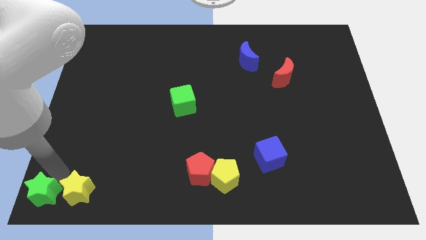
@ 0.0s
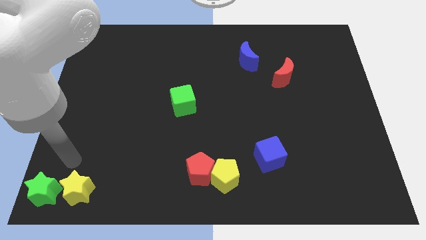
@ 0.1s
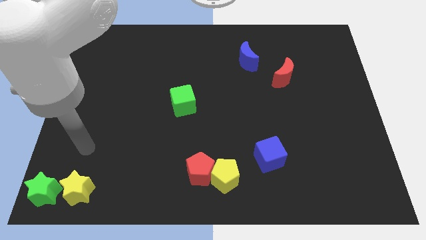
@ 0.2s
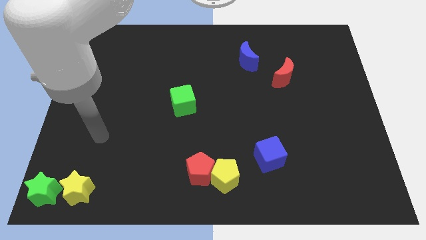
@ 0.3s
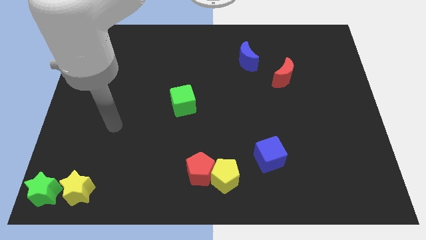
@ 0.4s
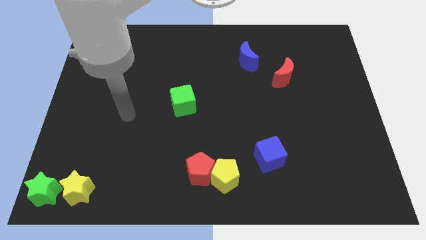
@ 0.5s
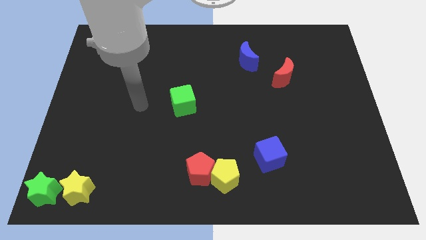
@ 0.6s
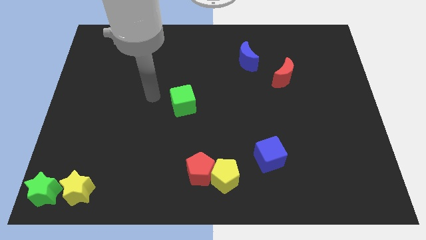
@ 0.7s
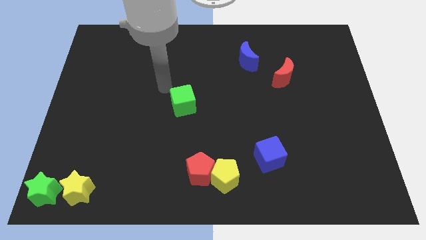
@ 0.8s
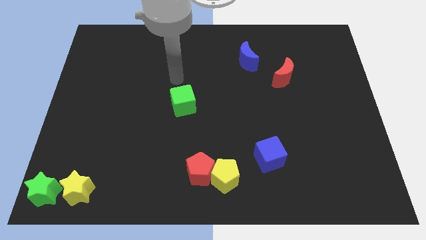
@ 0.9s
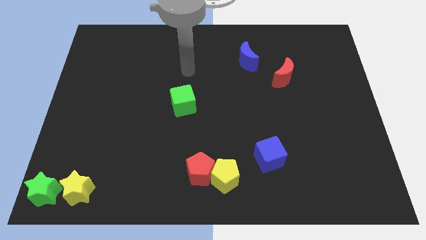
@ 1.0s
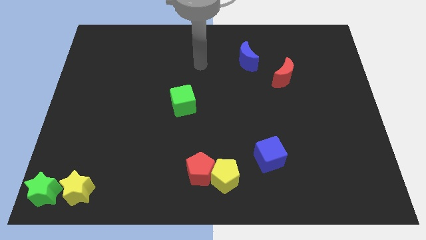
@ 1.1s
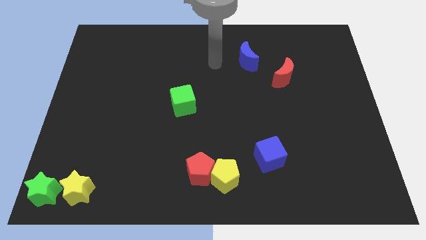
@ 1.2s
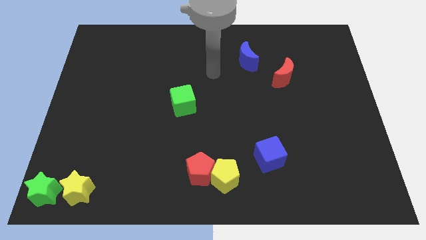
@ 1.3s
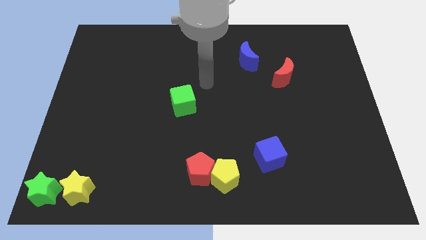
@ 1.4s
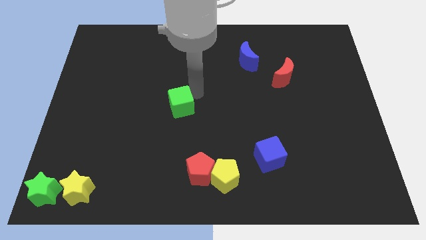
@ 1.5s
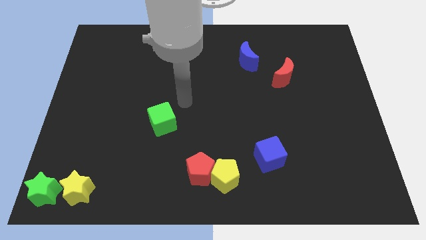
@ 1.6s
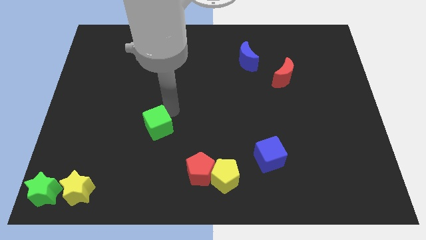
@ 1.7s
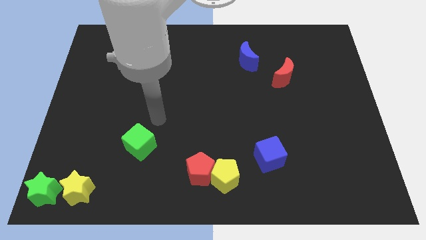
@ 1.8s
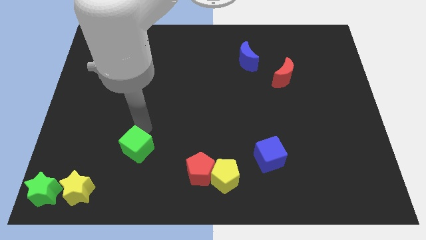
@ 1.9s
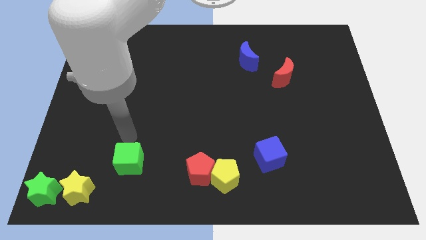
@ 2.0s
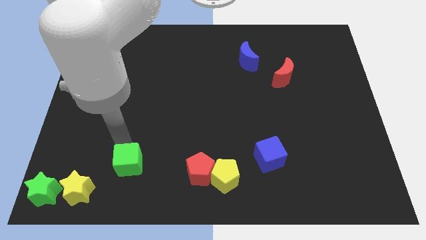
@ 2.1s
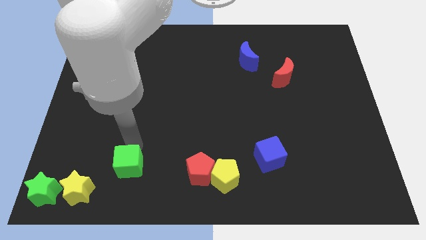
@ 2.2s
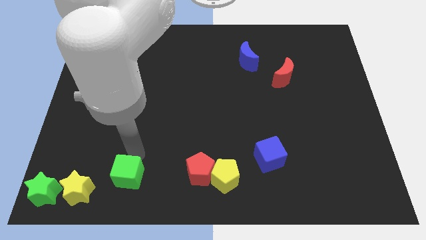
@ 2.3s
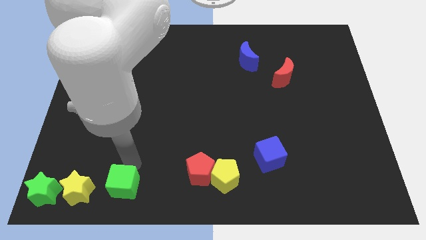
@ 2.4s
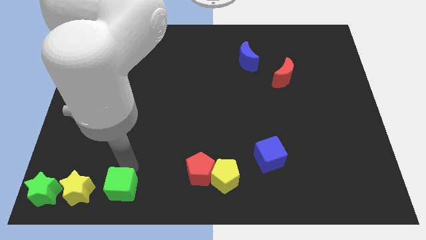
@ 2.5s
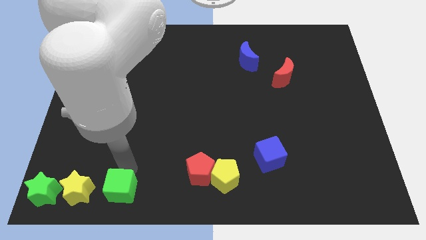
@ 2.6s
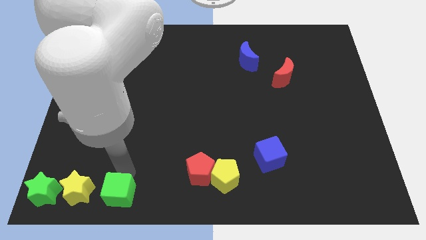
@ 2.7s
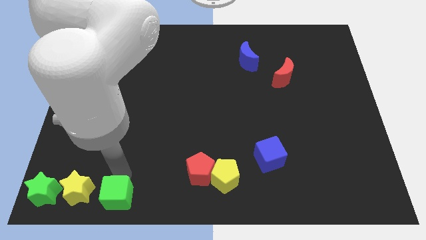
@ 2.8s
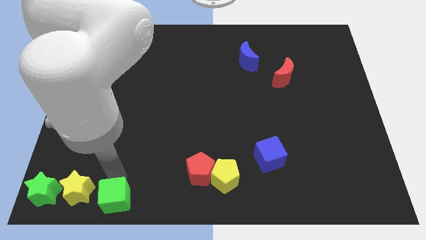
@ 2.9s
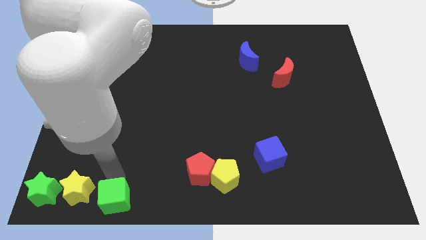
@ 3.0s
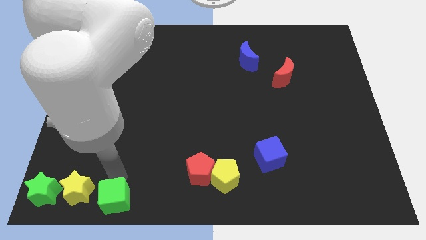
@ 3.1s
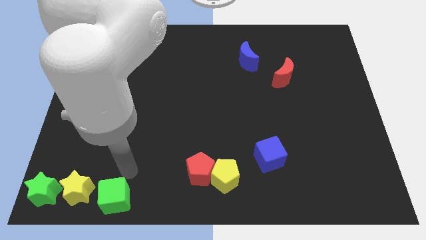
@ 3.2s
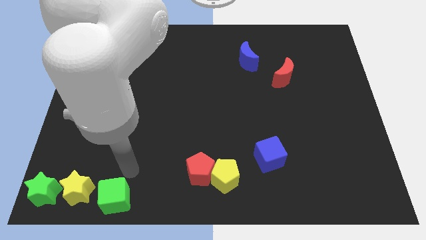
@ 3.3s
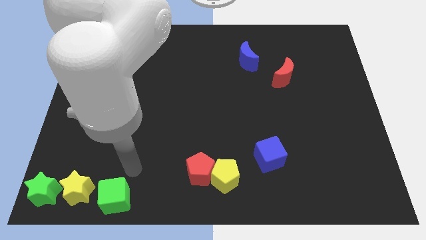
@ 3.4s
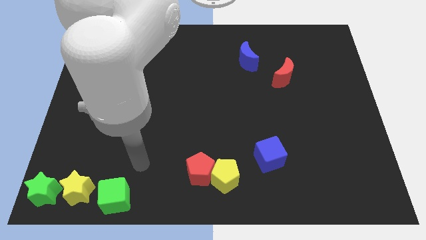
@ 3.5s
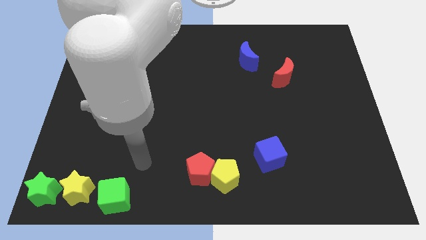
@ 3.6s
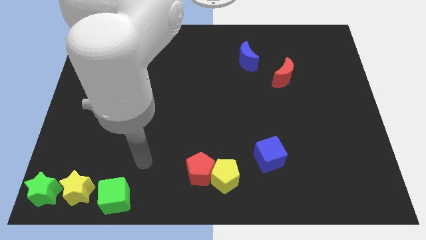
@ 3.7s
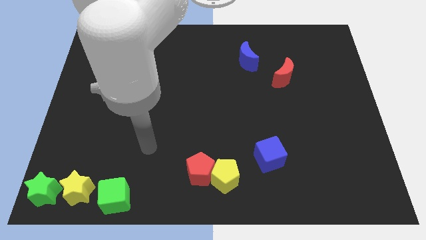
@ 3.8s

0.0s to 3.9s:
slide the green cube to the right side of the yellow star

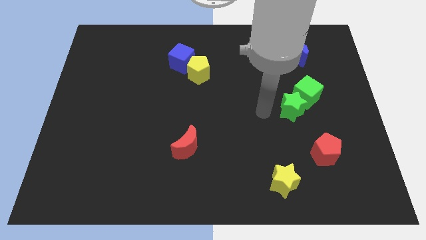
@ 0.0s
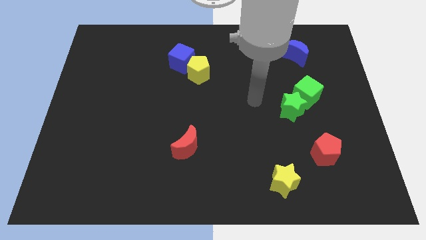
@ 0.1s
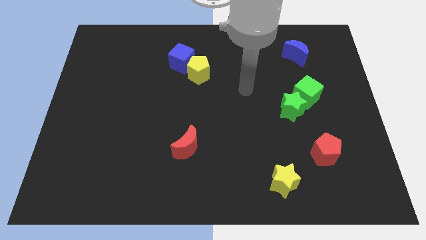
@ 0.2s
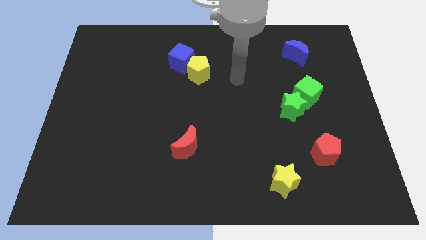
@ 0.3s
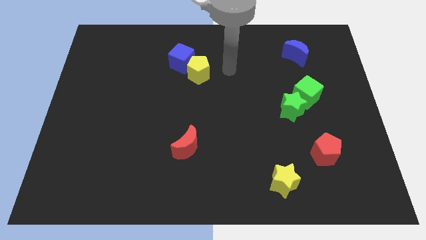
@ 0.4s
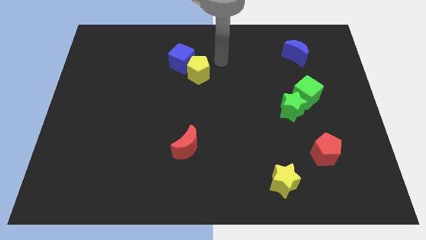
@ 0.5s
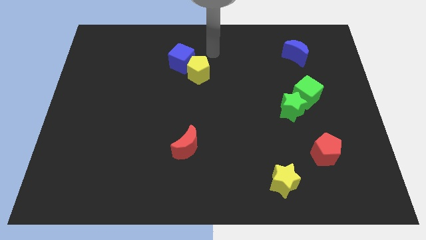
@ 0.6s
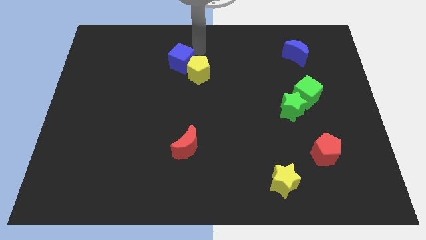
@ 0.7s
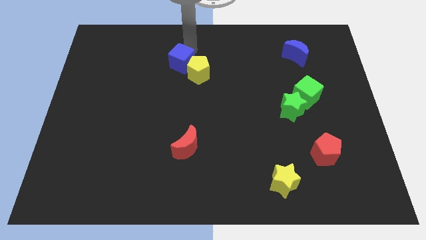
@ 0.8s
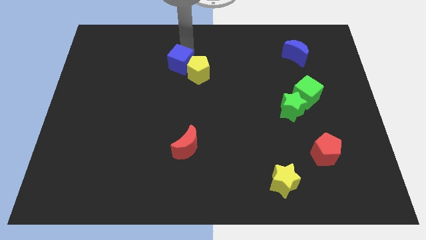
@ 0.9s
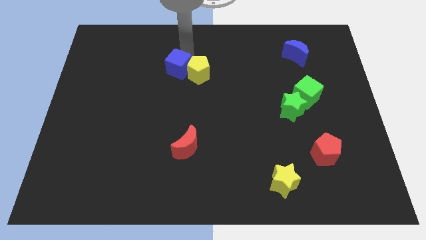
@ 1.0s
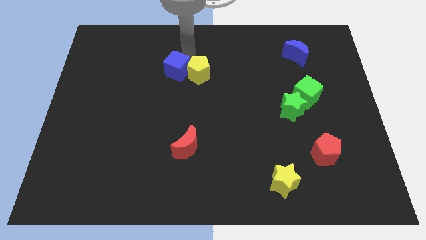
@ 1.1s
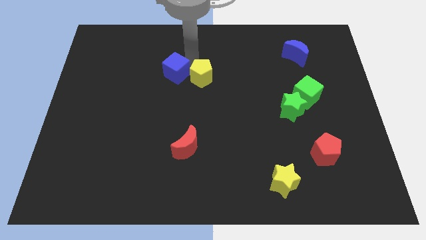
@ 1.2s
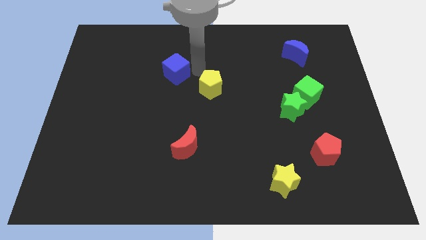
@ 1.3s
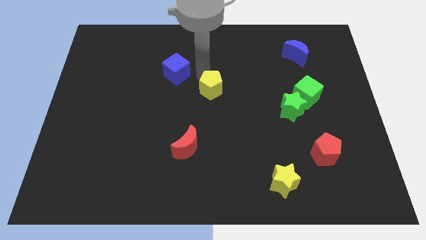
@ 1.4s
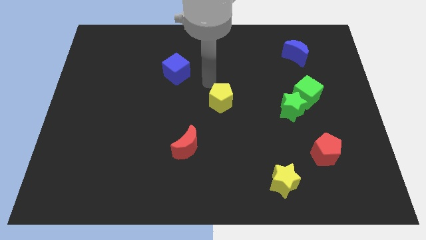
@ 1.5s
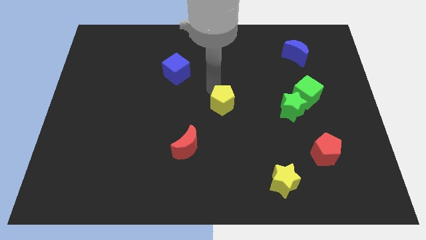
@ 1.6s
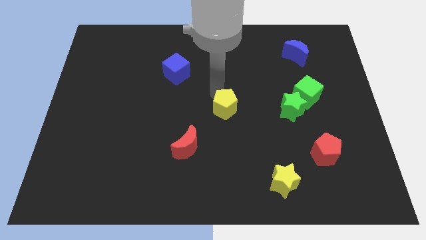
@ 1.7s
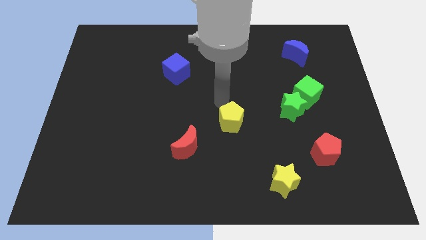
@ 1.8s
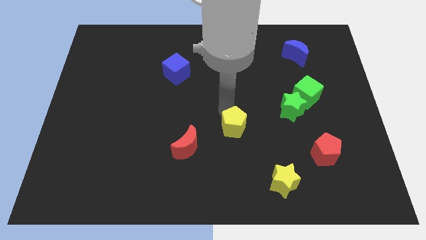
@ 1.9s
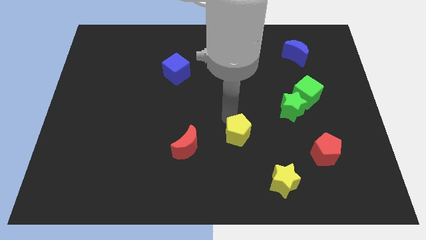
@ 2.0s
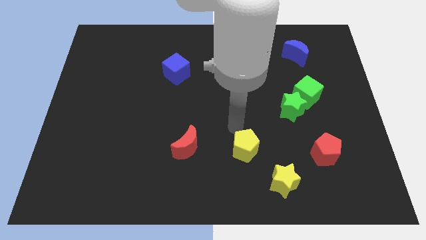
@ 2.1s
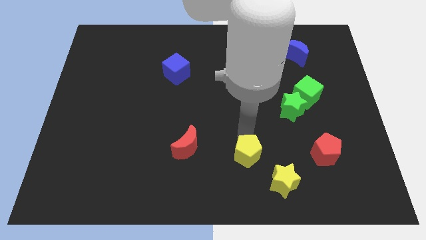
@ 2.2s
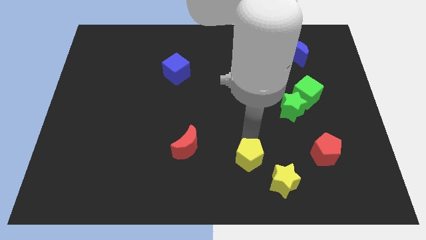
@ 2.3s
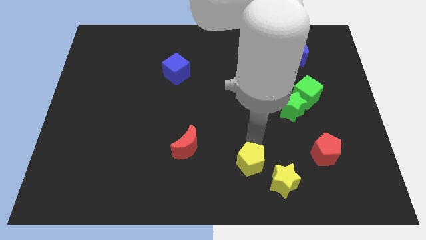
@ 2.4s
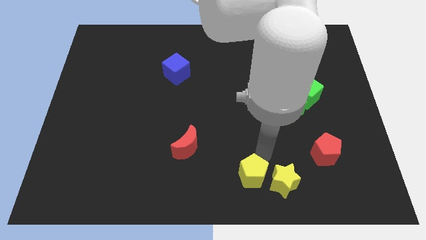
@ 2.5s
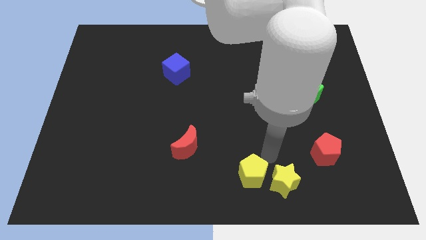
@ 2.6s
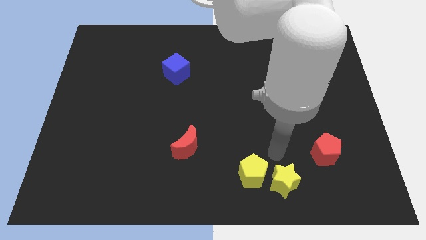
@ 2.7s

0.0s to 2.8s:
place the yellow pentagon to the left side of the yellow star

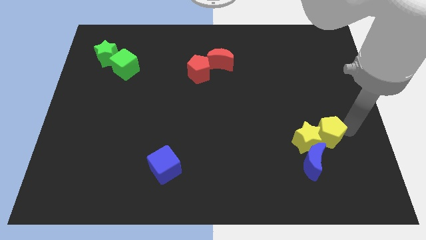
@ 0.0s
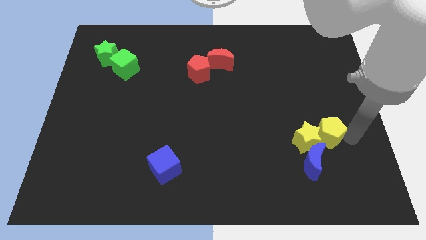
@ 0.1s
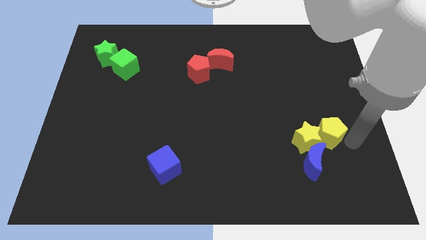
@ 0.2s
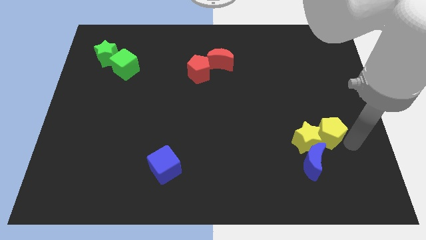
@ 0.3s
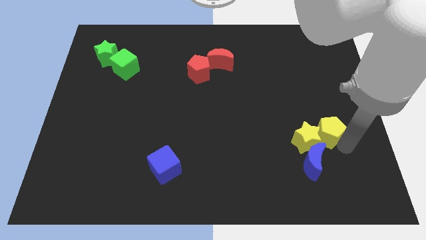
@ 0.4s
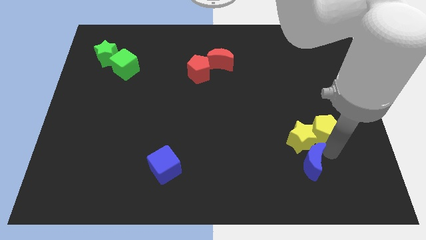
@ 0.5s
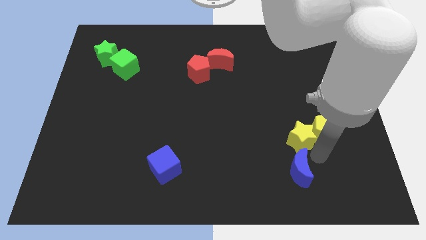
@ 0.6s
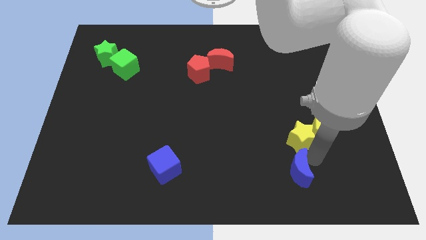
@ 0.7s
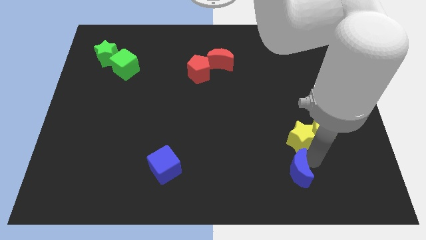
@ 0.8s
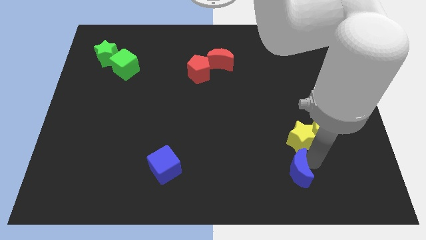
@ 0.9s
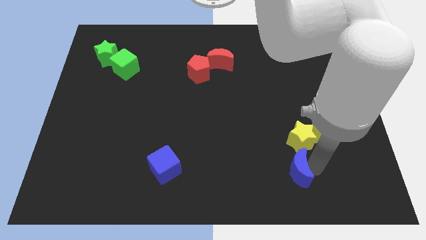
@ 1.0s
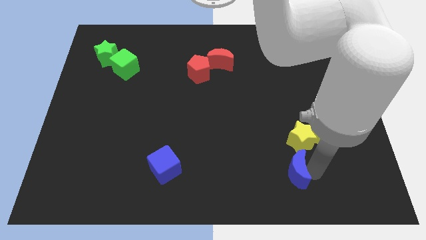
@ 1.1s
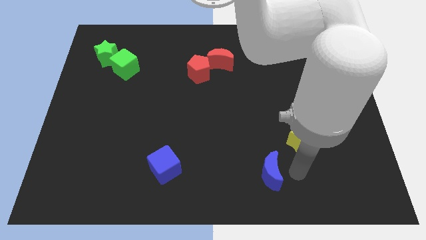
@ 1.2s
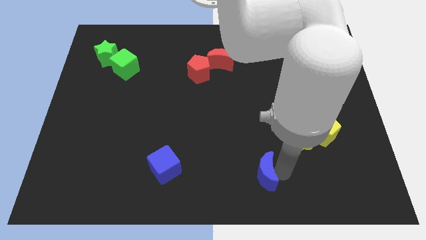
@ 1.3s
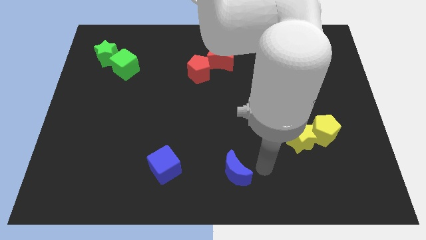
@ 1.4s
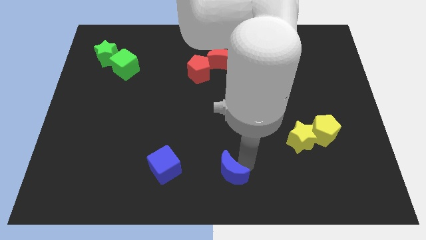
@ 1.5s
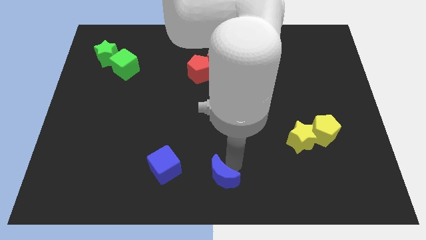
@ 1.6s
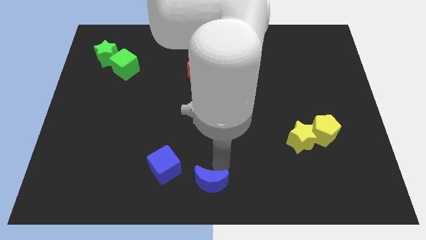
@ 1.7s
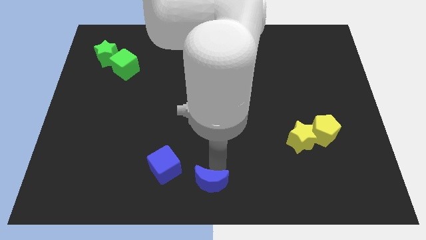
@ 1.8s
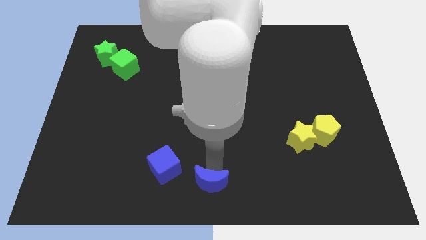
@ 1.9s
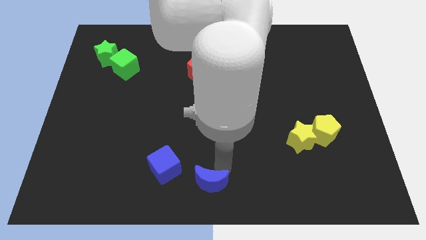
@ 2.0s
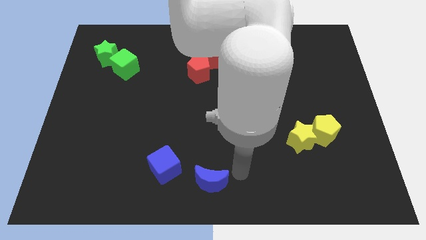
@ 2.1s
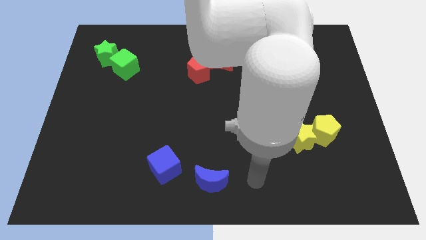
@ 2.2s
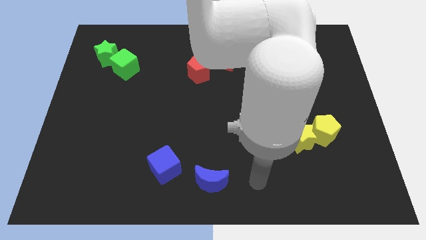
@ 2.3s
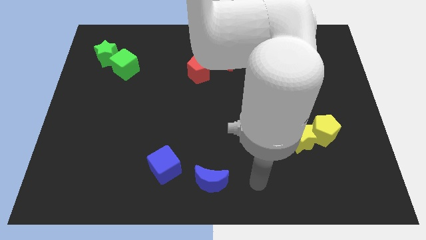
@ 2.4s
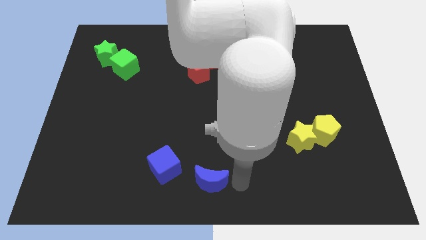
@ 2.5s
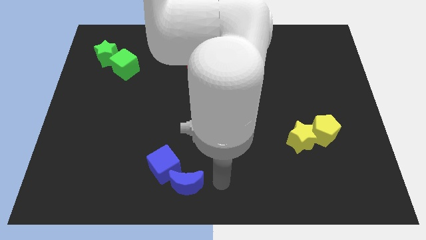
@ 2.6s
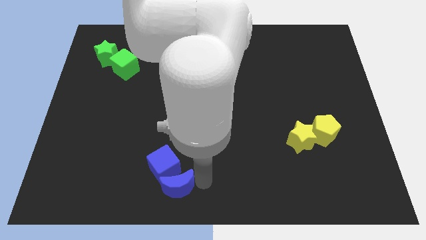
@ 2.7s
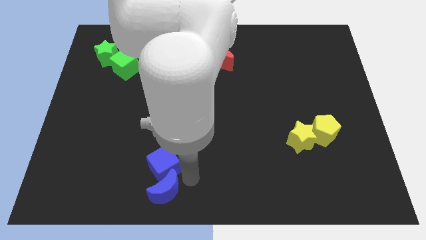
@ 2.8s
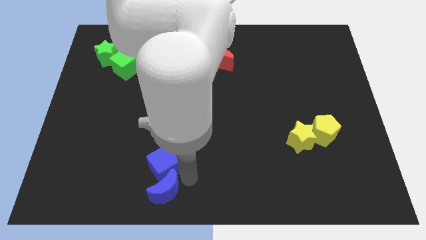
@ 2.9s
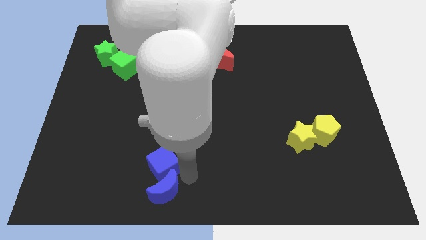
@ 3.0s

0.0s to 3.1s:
place the blue moon below the blue cube
